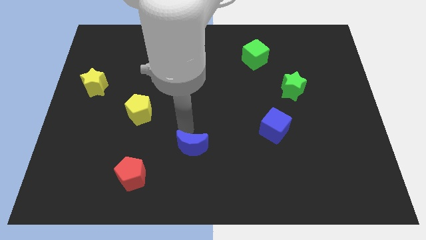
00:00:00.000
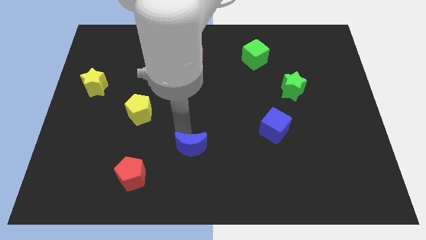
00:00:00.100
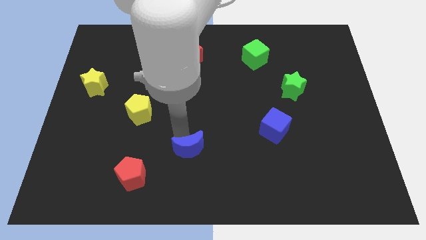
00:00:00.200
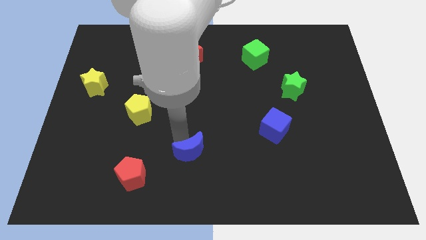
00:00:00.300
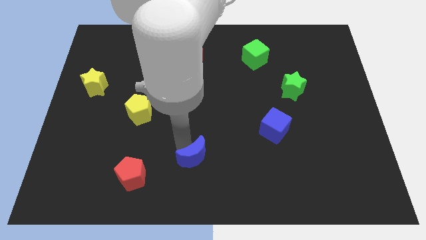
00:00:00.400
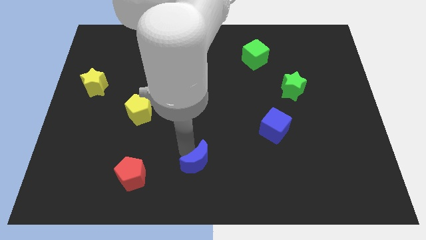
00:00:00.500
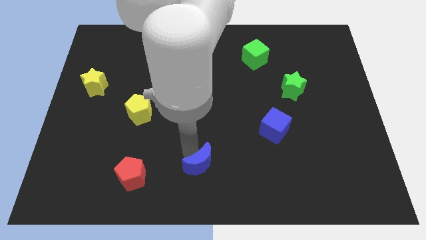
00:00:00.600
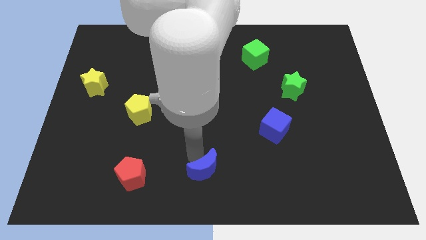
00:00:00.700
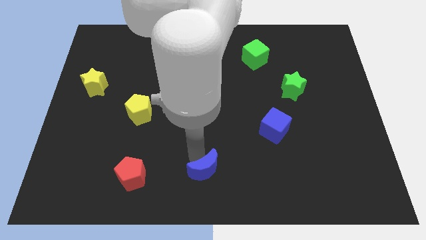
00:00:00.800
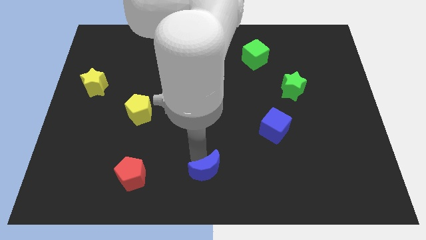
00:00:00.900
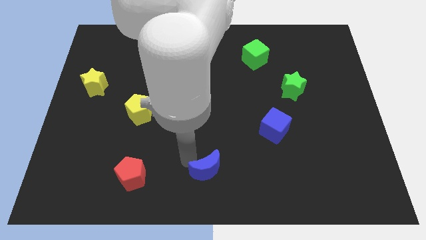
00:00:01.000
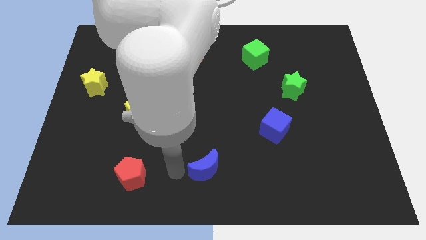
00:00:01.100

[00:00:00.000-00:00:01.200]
push the blue moon to the bottom center

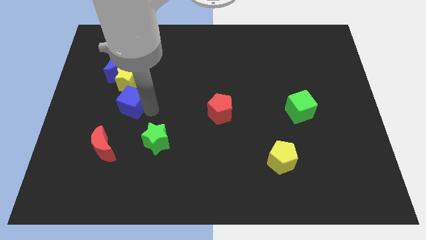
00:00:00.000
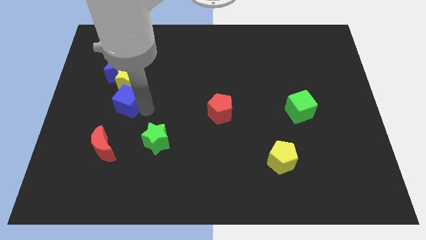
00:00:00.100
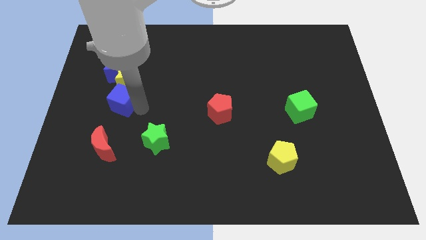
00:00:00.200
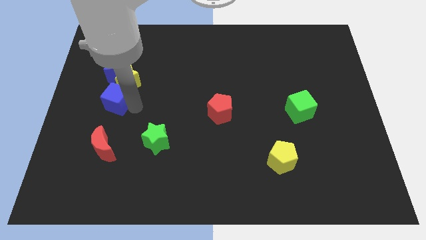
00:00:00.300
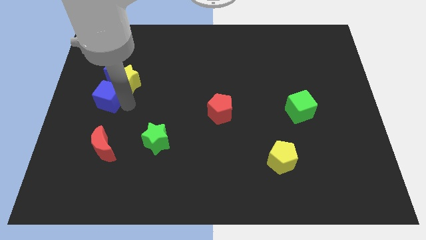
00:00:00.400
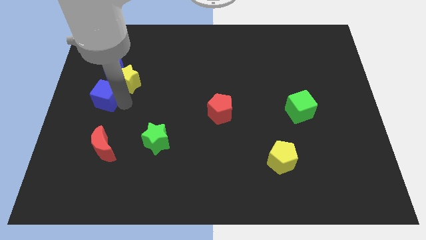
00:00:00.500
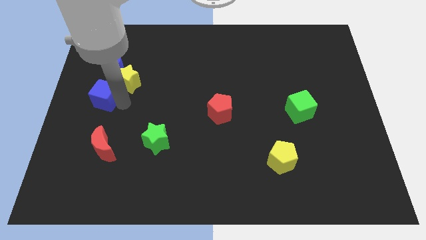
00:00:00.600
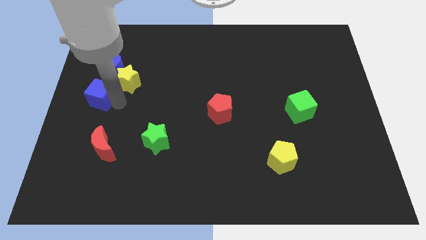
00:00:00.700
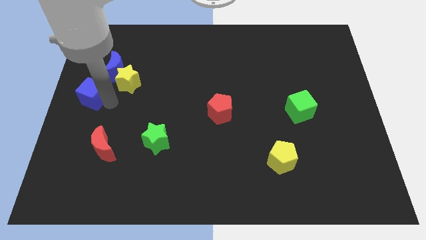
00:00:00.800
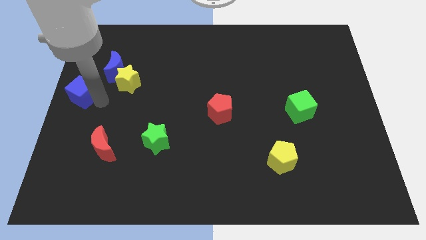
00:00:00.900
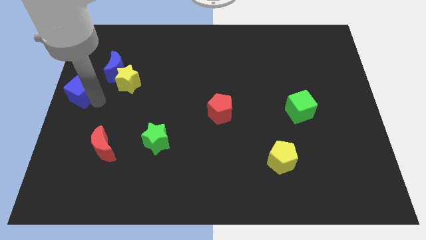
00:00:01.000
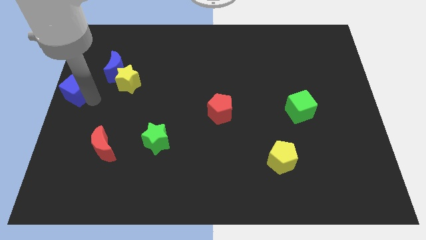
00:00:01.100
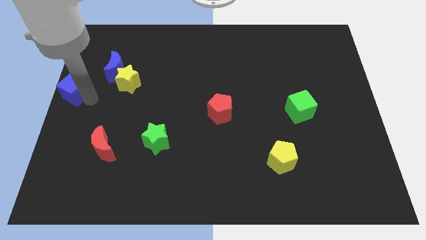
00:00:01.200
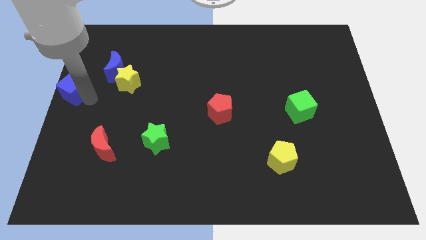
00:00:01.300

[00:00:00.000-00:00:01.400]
move the blue cube to the left center of the board

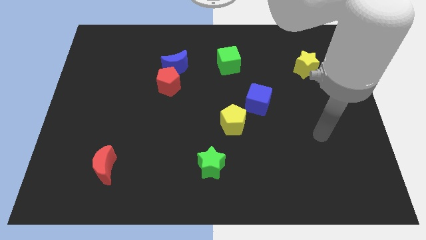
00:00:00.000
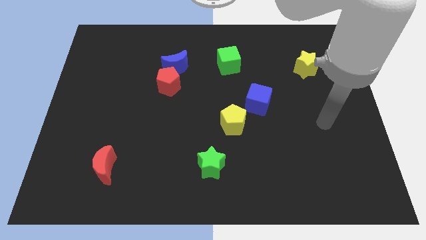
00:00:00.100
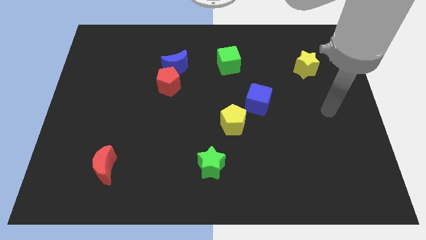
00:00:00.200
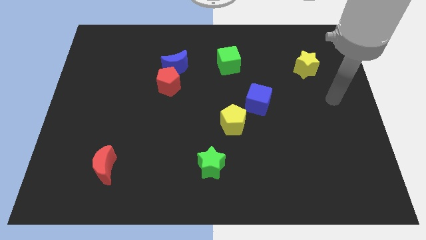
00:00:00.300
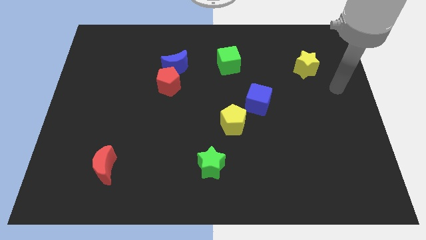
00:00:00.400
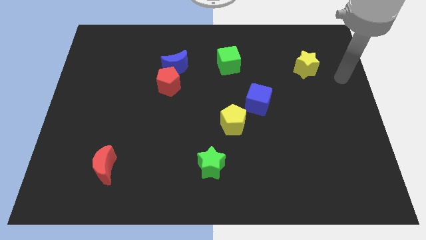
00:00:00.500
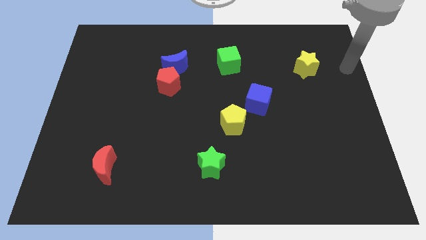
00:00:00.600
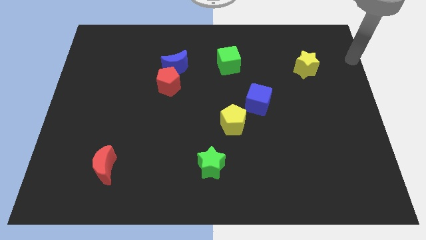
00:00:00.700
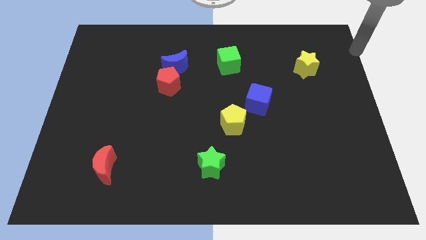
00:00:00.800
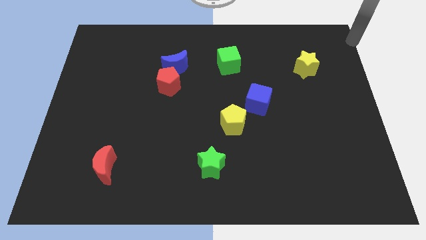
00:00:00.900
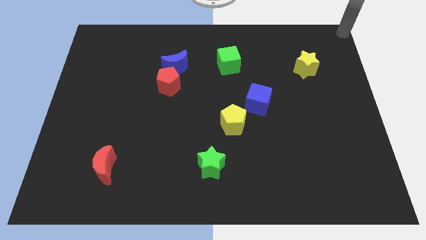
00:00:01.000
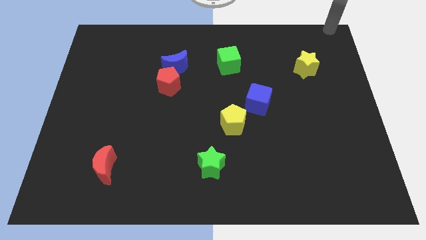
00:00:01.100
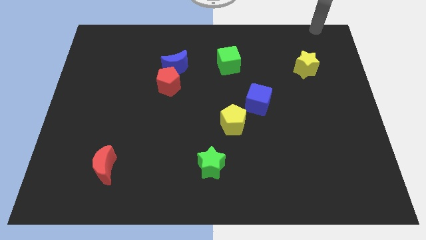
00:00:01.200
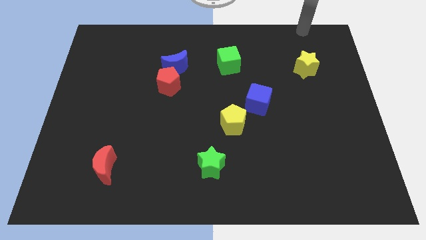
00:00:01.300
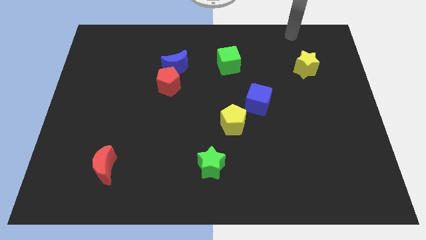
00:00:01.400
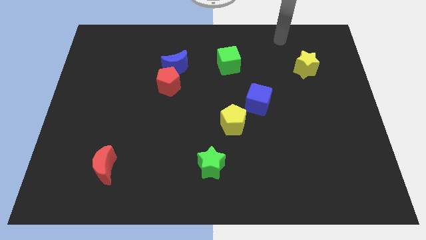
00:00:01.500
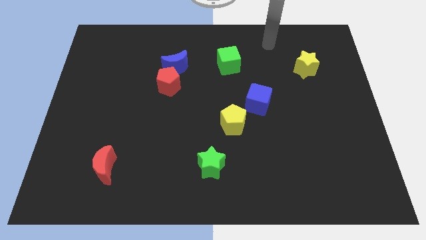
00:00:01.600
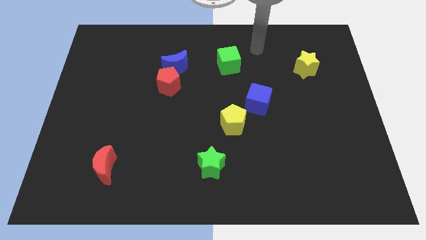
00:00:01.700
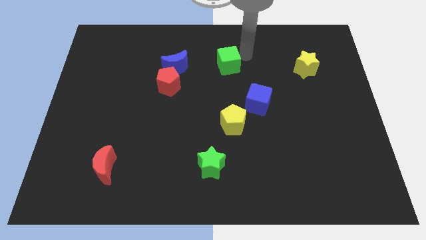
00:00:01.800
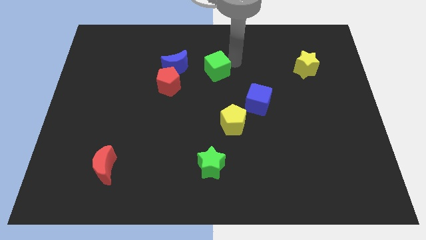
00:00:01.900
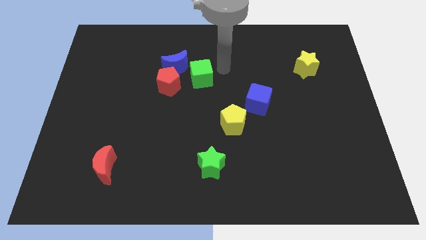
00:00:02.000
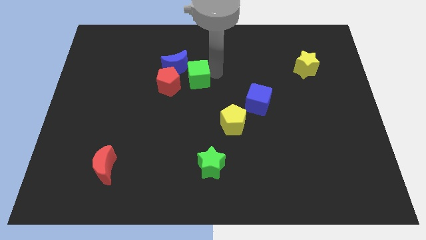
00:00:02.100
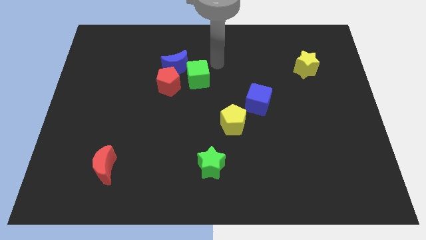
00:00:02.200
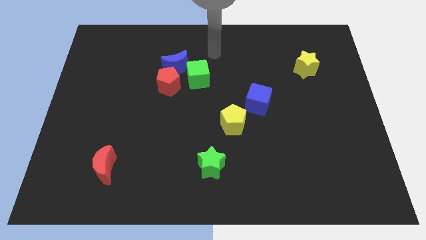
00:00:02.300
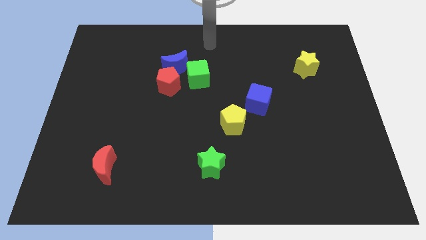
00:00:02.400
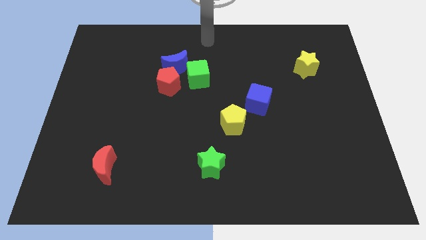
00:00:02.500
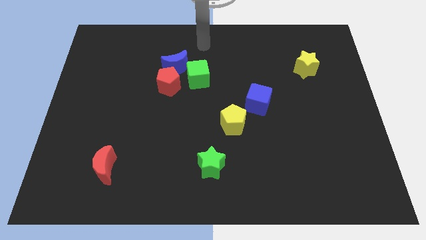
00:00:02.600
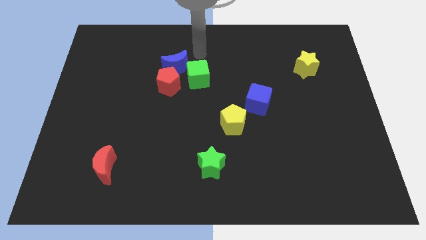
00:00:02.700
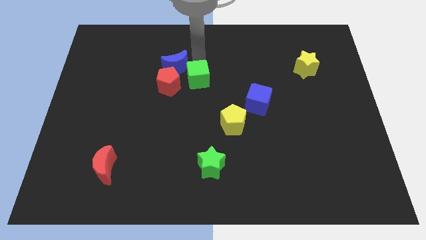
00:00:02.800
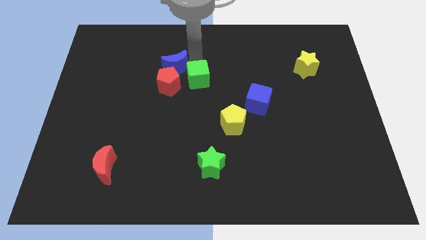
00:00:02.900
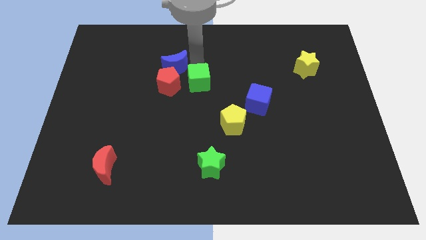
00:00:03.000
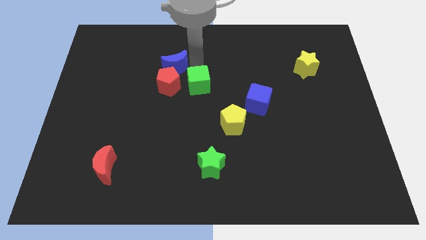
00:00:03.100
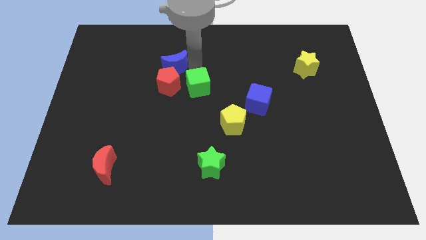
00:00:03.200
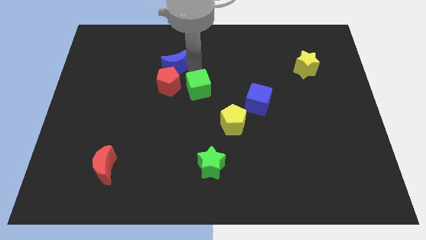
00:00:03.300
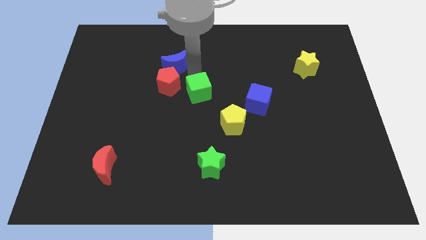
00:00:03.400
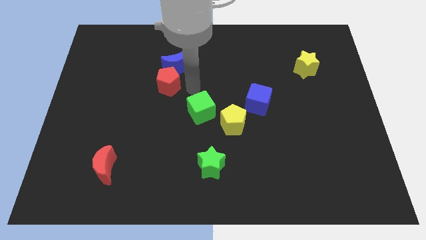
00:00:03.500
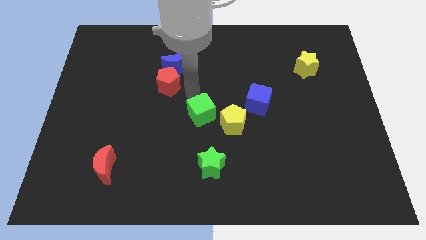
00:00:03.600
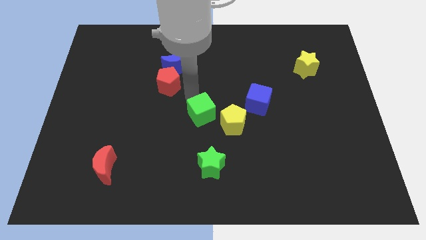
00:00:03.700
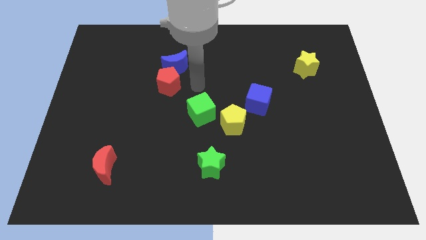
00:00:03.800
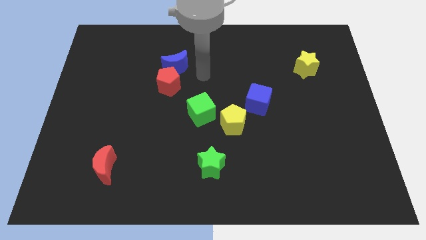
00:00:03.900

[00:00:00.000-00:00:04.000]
place the green cube diagonally top right to red moon

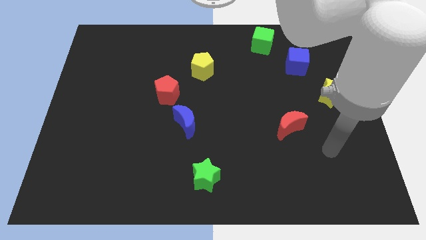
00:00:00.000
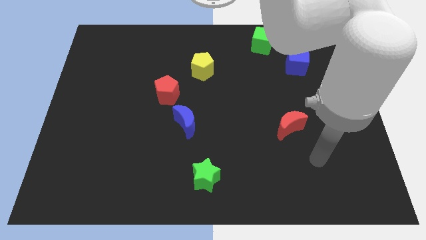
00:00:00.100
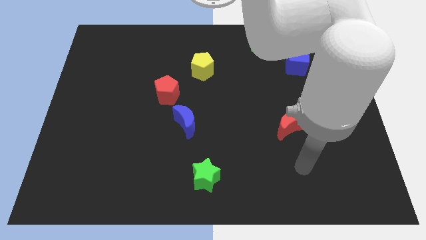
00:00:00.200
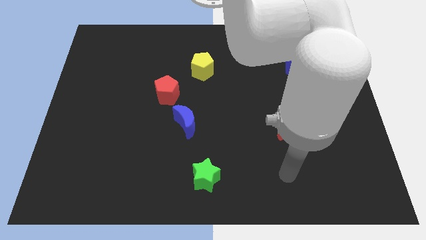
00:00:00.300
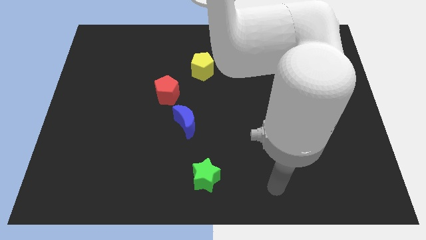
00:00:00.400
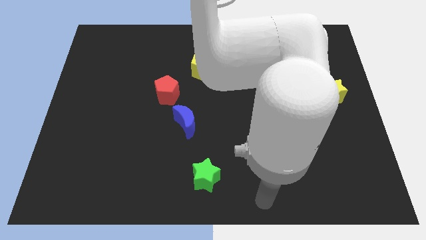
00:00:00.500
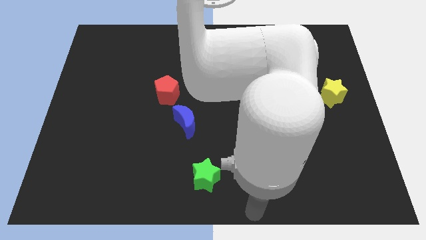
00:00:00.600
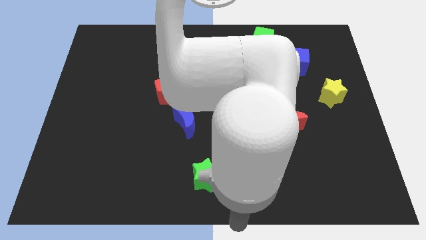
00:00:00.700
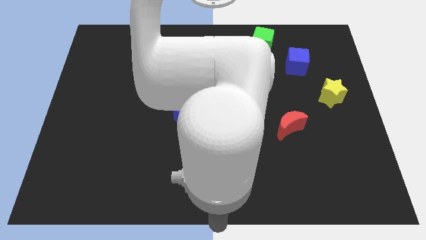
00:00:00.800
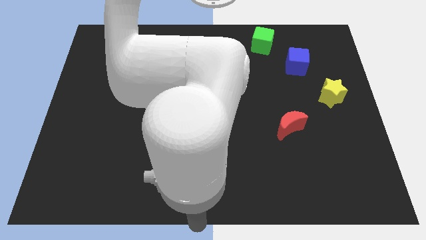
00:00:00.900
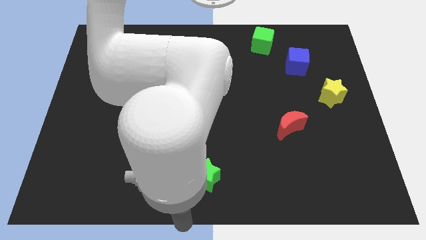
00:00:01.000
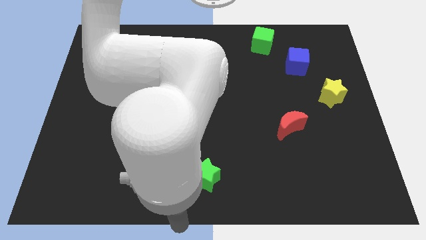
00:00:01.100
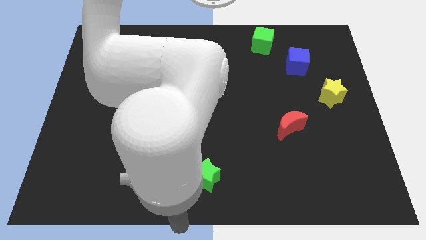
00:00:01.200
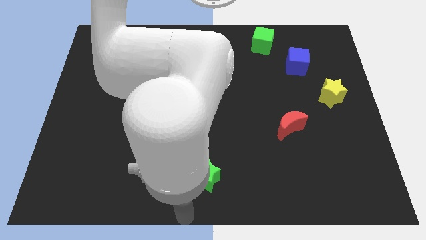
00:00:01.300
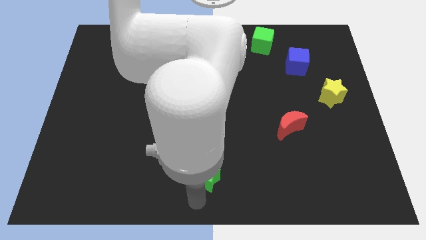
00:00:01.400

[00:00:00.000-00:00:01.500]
move the arm to the bottom of the green star

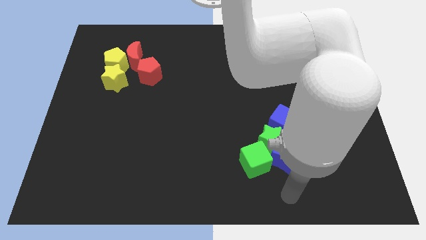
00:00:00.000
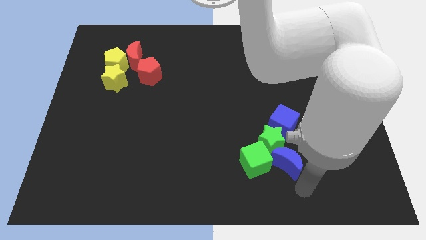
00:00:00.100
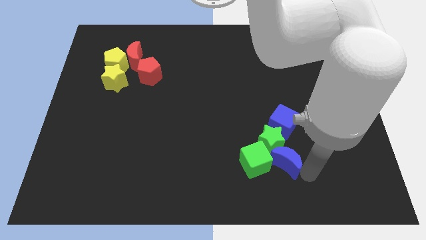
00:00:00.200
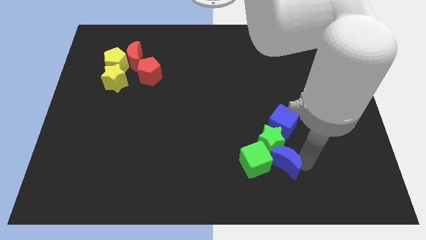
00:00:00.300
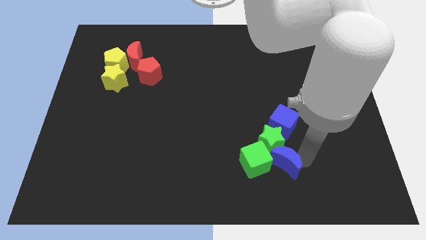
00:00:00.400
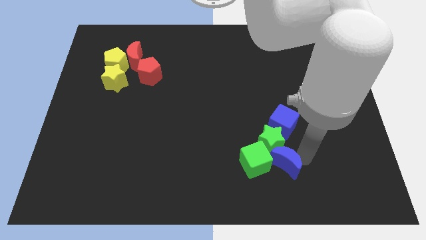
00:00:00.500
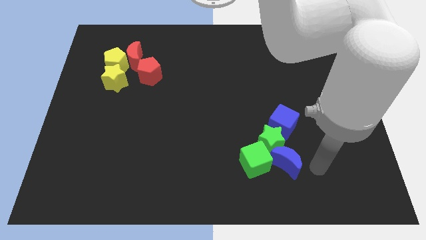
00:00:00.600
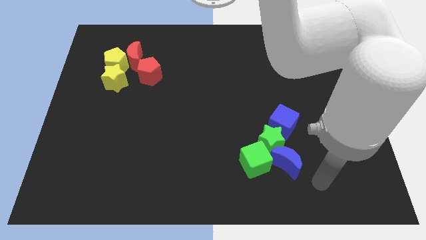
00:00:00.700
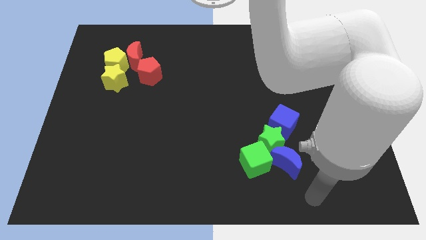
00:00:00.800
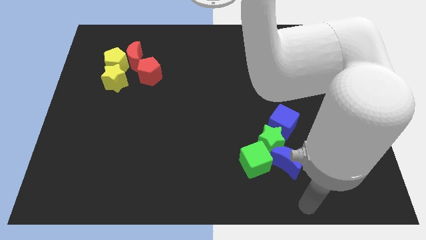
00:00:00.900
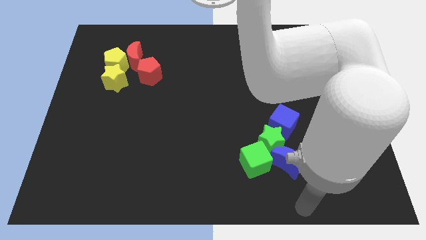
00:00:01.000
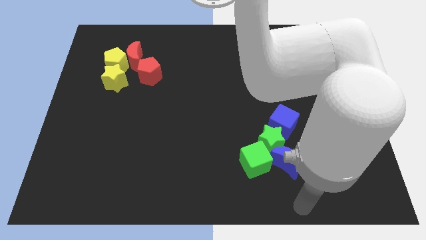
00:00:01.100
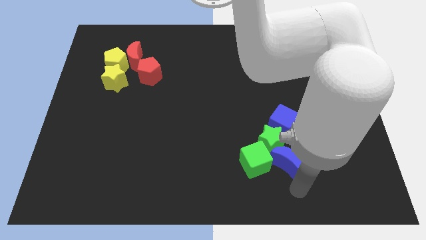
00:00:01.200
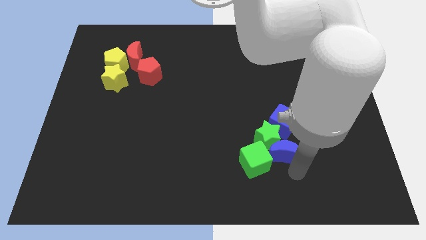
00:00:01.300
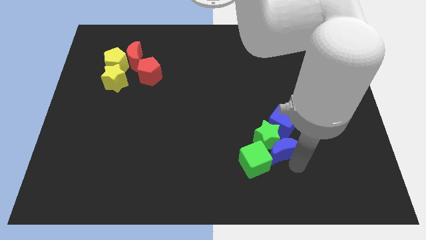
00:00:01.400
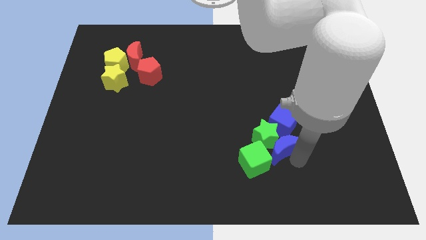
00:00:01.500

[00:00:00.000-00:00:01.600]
slightly pull the blue moon
